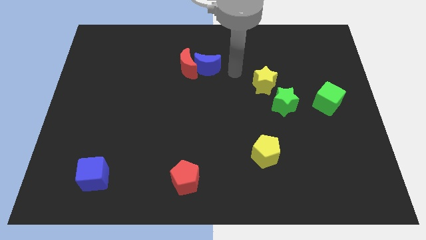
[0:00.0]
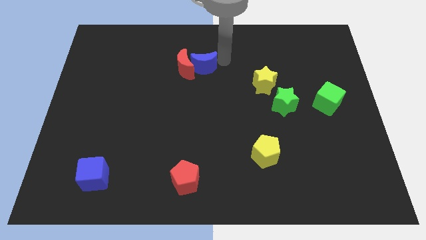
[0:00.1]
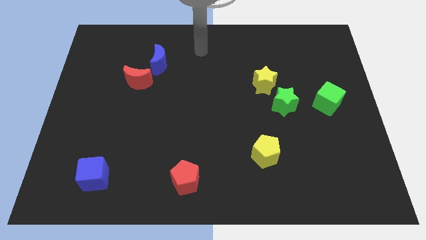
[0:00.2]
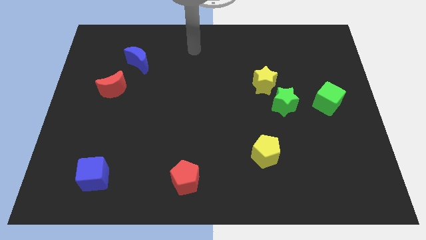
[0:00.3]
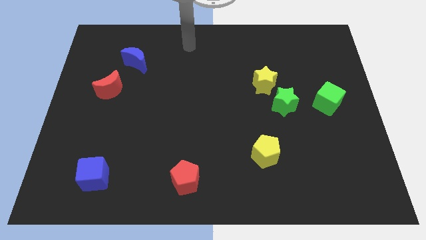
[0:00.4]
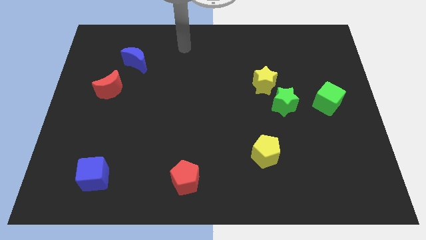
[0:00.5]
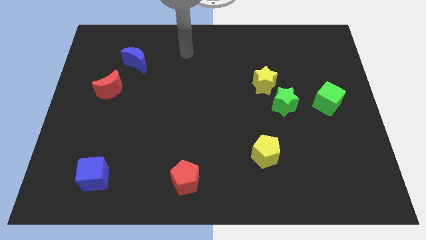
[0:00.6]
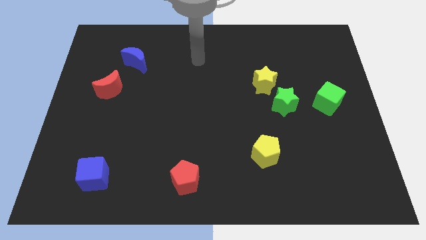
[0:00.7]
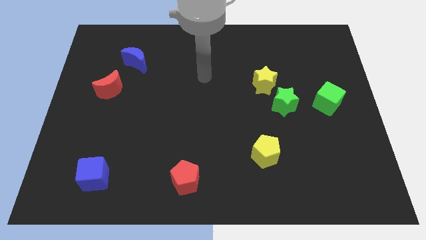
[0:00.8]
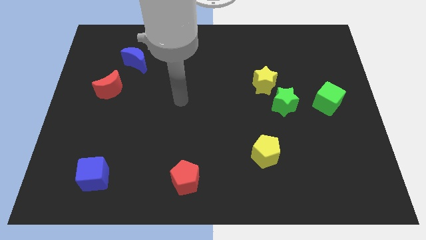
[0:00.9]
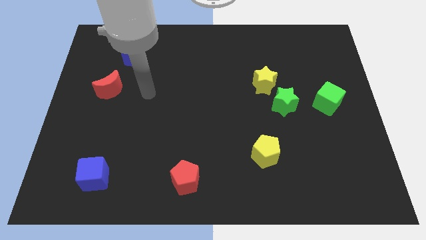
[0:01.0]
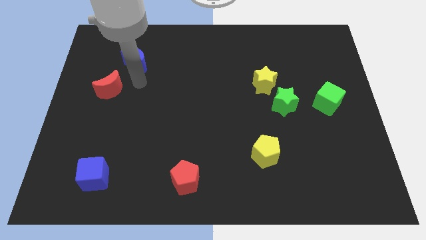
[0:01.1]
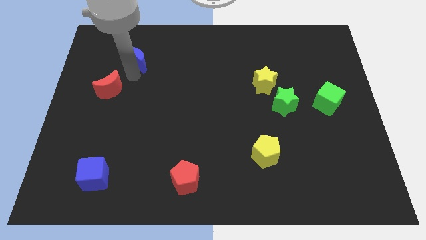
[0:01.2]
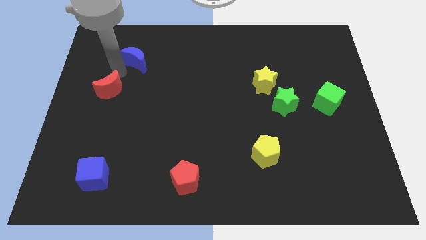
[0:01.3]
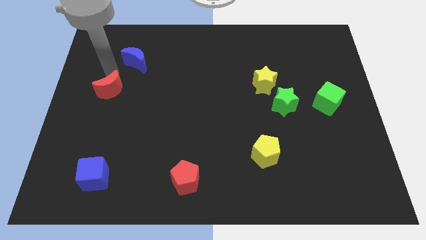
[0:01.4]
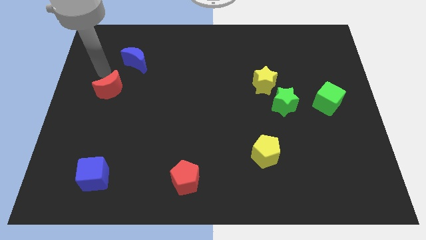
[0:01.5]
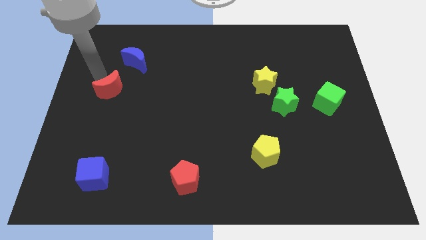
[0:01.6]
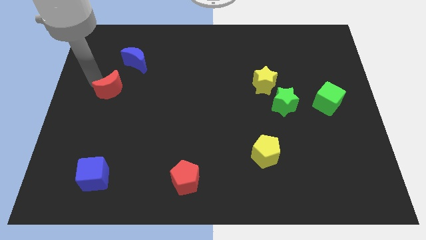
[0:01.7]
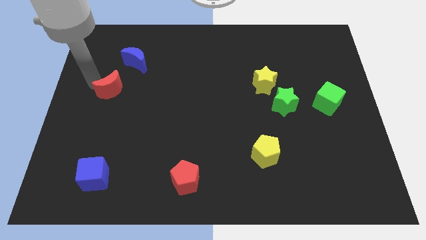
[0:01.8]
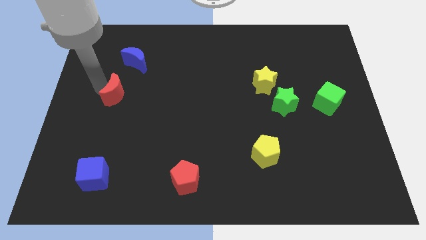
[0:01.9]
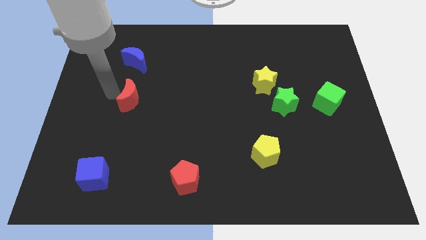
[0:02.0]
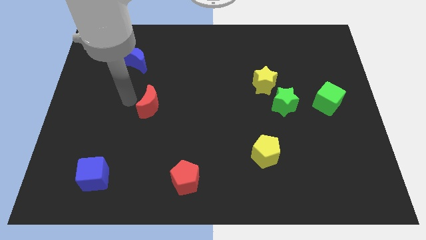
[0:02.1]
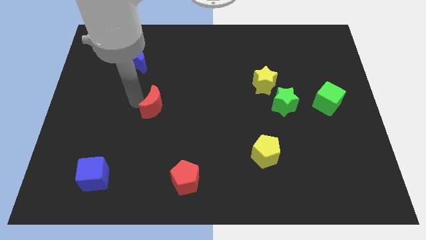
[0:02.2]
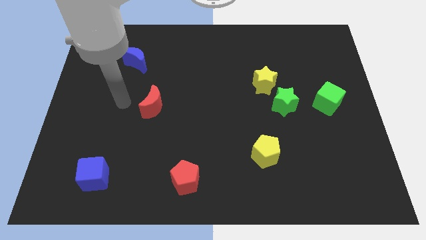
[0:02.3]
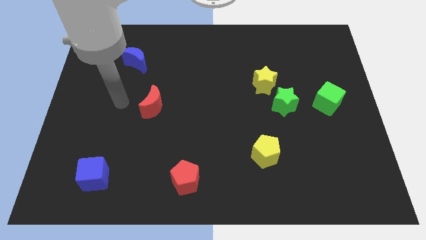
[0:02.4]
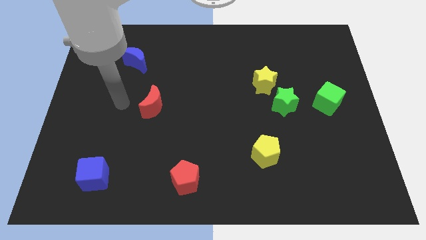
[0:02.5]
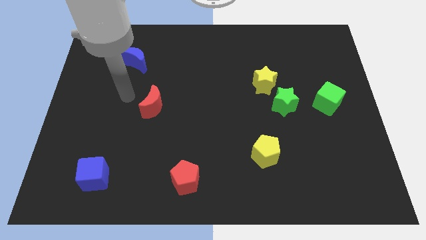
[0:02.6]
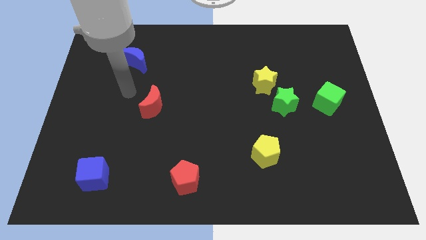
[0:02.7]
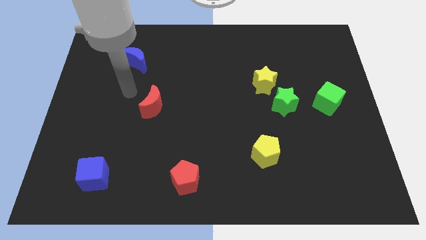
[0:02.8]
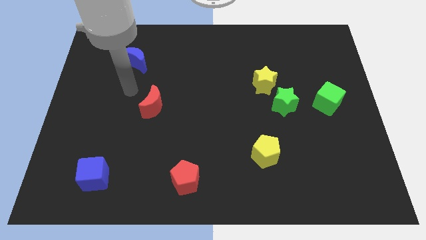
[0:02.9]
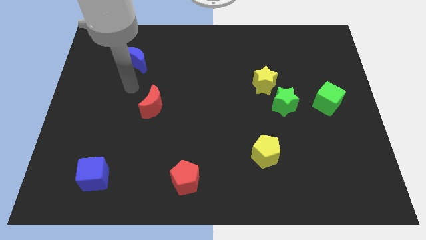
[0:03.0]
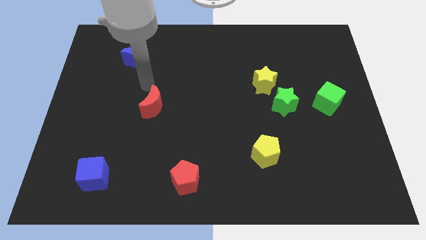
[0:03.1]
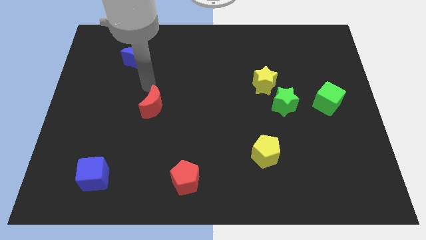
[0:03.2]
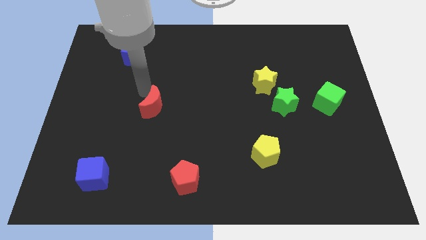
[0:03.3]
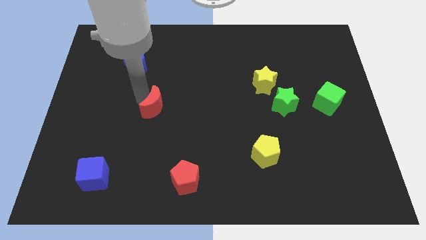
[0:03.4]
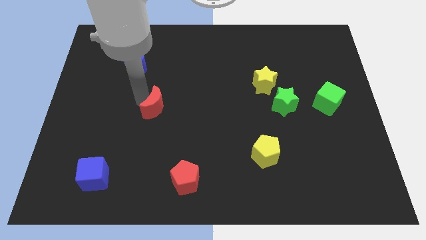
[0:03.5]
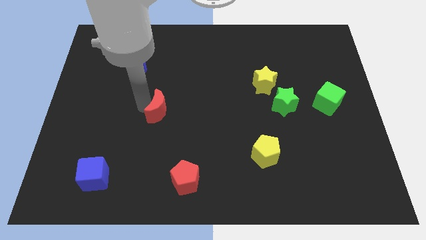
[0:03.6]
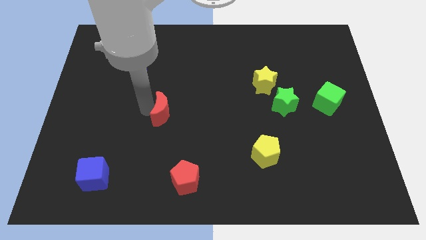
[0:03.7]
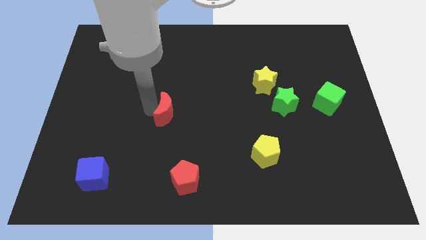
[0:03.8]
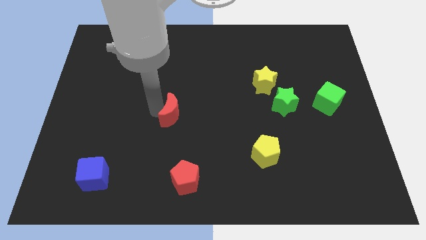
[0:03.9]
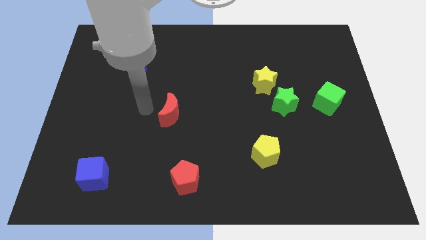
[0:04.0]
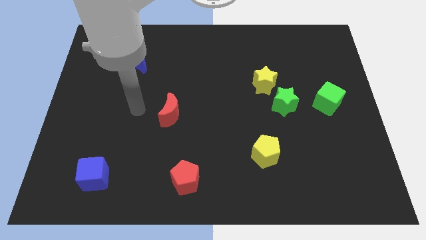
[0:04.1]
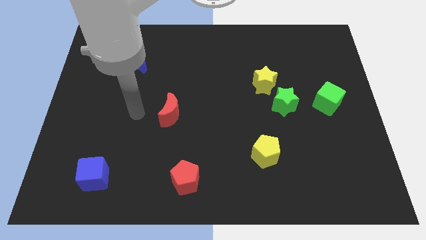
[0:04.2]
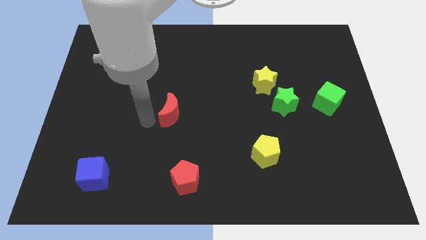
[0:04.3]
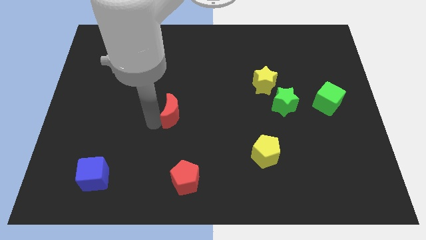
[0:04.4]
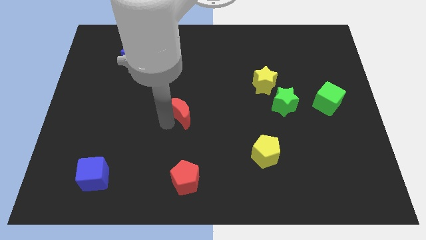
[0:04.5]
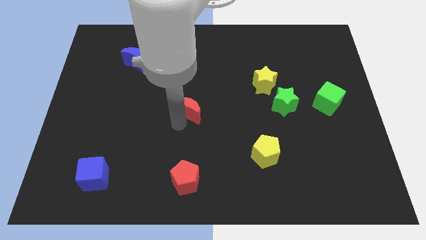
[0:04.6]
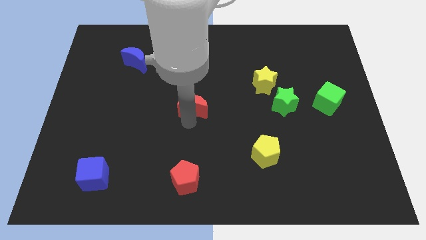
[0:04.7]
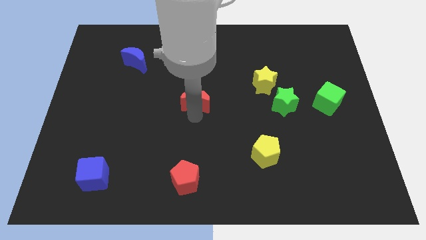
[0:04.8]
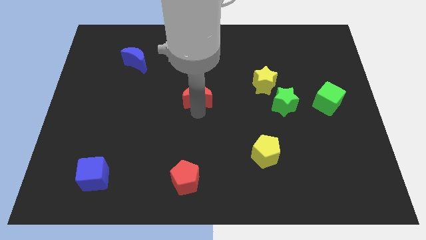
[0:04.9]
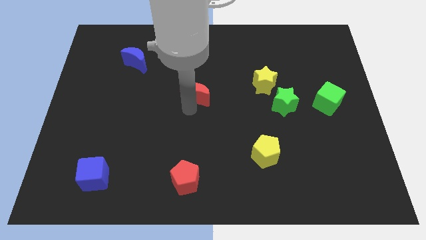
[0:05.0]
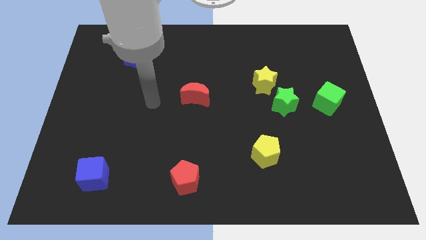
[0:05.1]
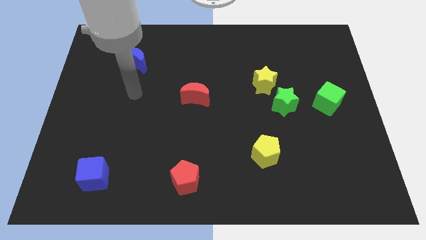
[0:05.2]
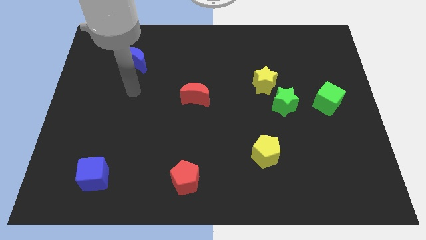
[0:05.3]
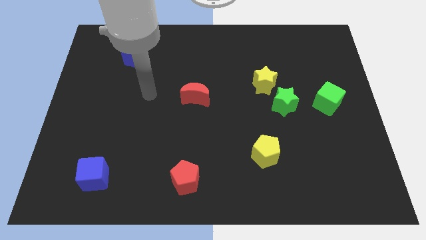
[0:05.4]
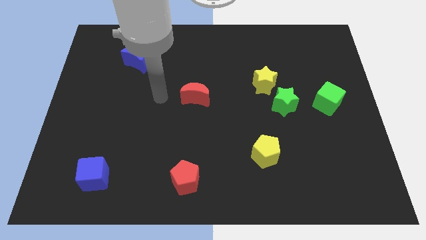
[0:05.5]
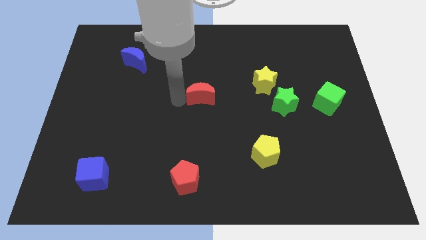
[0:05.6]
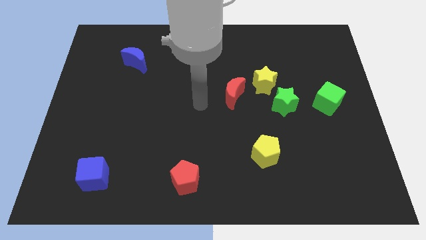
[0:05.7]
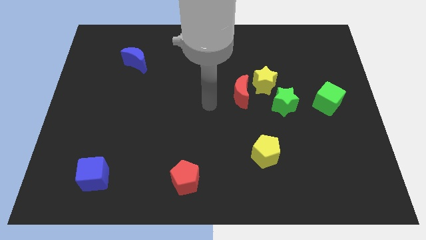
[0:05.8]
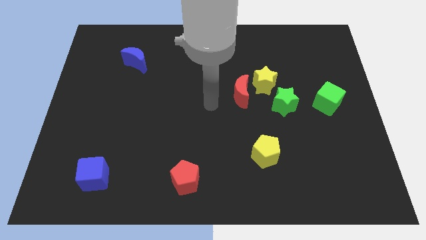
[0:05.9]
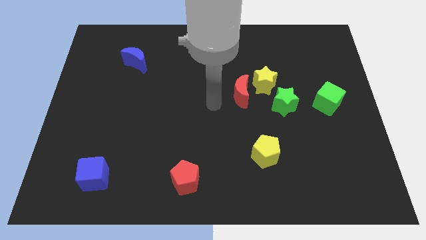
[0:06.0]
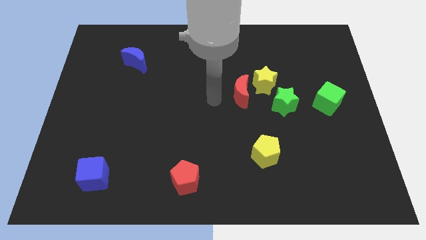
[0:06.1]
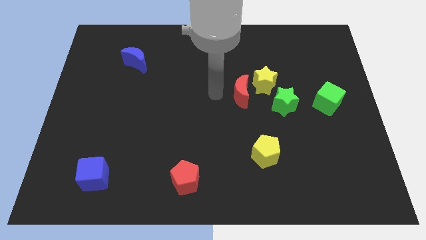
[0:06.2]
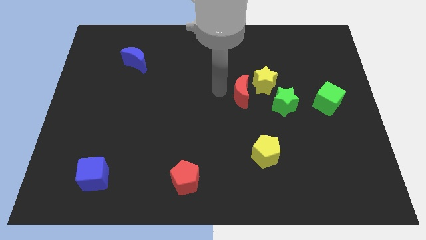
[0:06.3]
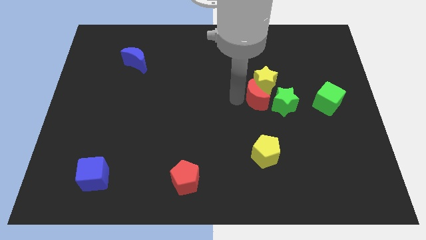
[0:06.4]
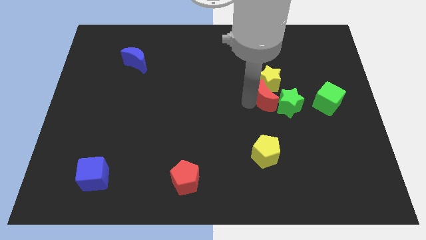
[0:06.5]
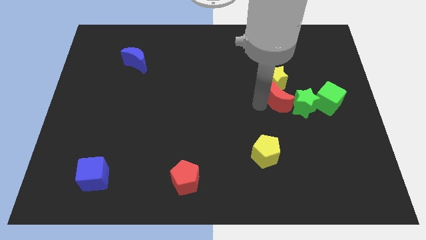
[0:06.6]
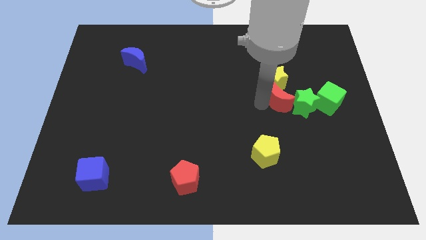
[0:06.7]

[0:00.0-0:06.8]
put the red moon towards the green star

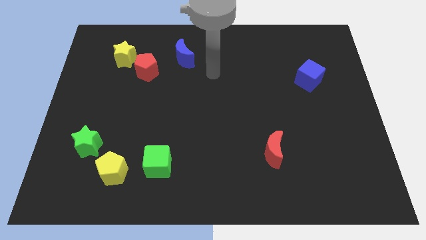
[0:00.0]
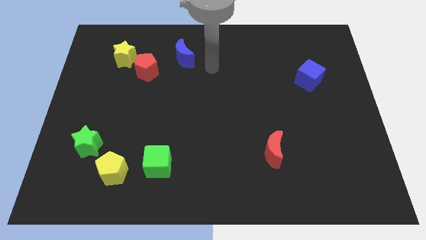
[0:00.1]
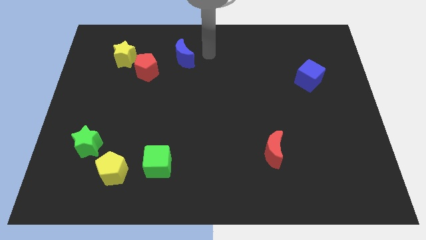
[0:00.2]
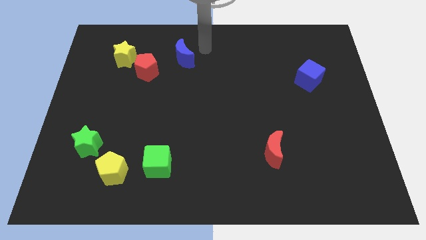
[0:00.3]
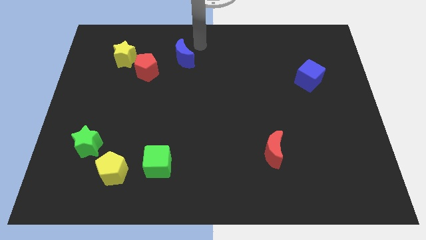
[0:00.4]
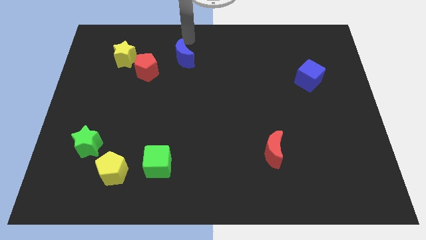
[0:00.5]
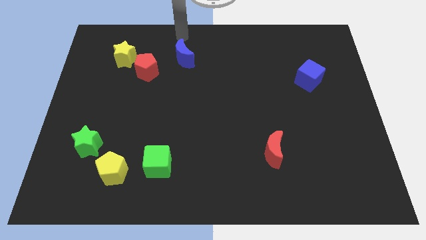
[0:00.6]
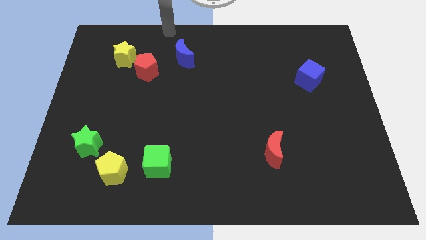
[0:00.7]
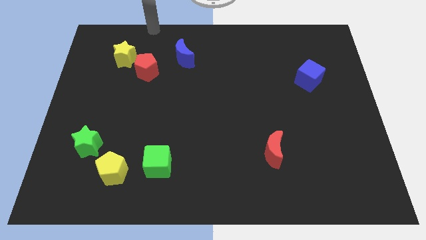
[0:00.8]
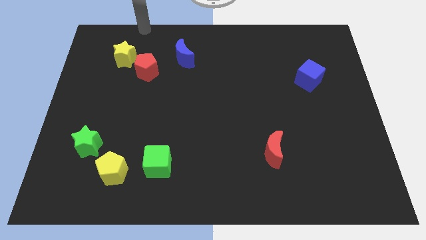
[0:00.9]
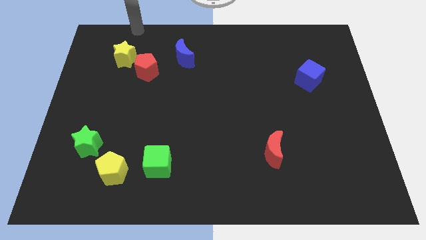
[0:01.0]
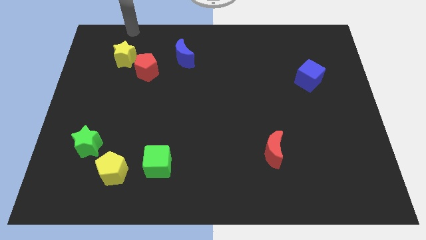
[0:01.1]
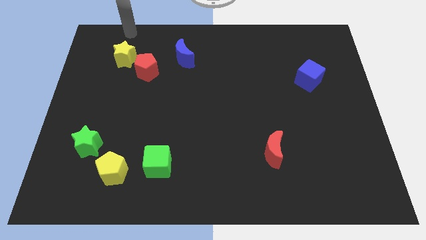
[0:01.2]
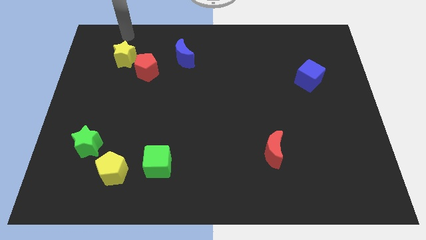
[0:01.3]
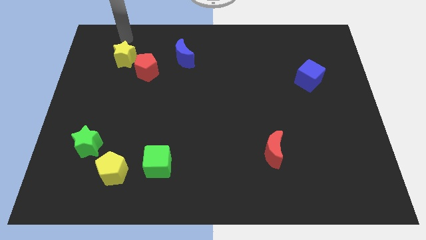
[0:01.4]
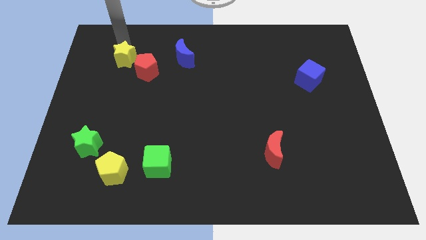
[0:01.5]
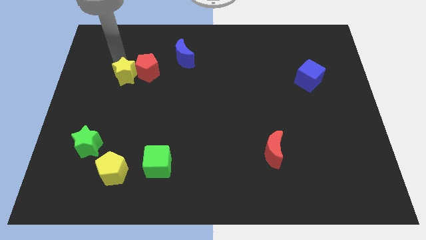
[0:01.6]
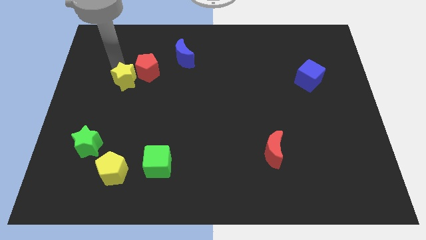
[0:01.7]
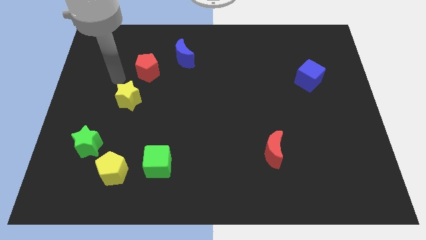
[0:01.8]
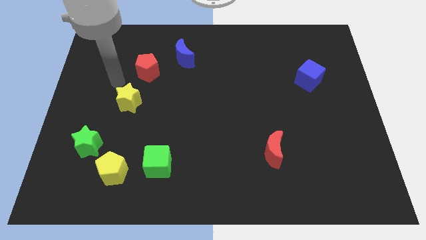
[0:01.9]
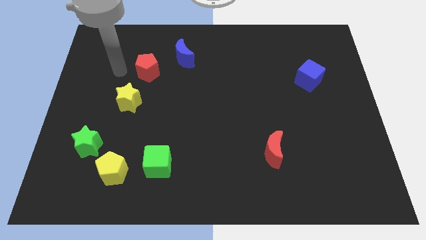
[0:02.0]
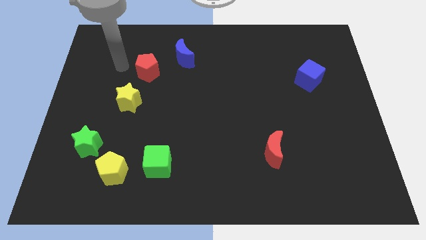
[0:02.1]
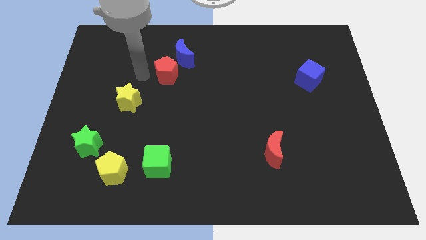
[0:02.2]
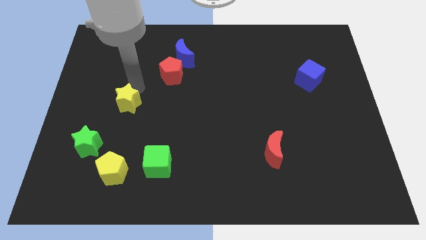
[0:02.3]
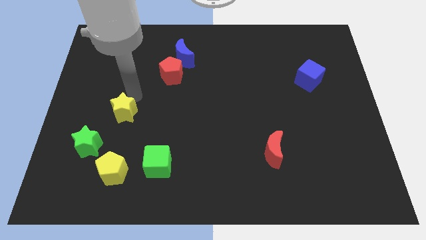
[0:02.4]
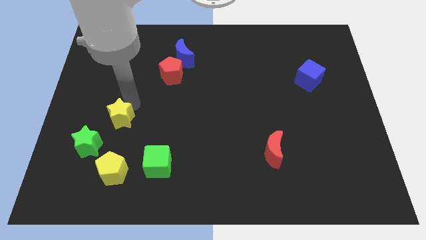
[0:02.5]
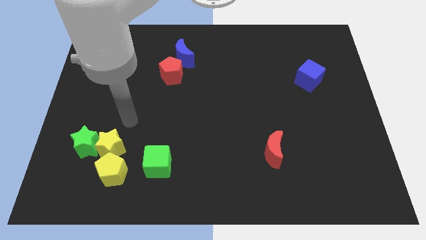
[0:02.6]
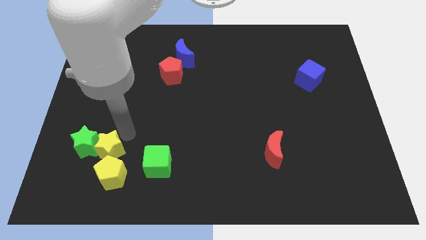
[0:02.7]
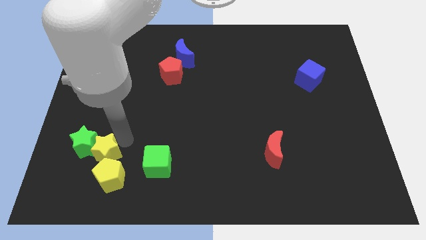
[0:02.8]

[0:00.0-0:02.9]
slide the yellow star close to the yellow pentagon
